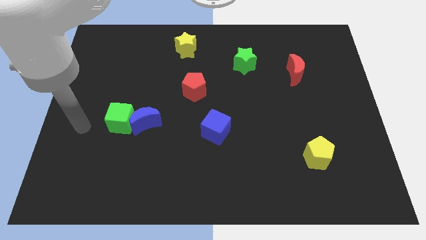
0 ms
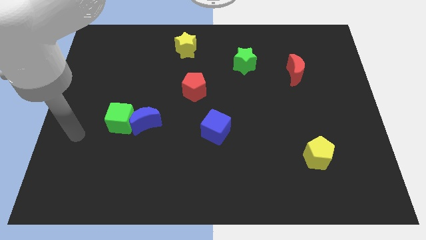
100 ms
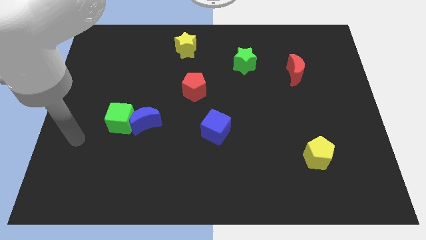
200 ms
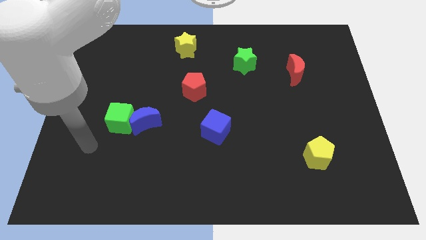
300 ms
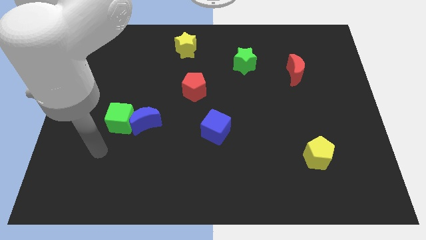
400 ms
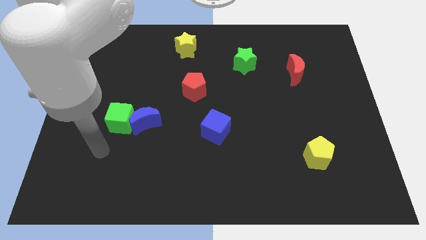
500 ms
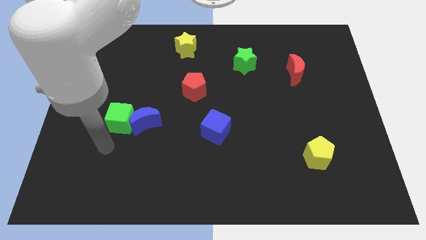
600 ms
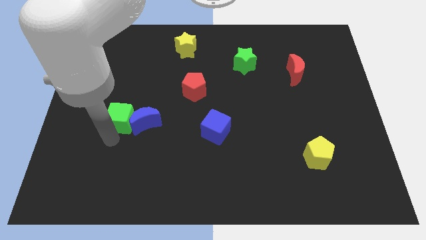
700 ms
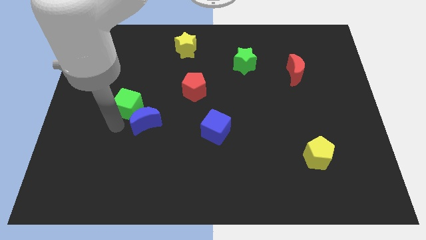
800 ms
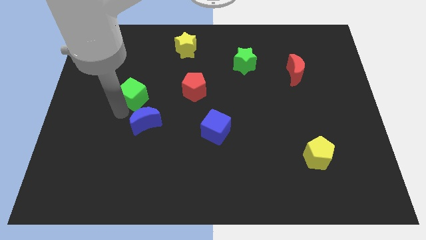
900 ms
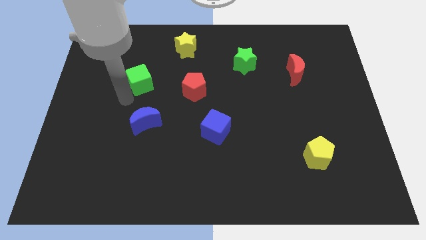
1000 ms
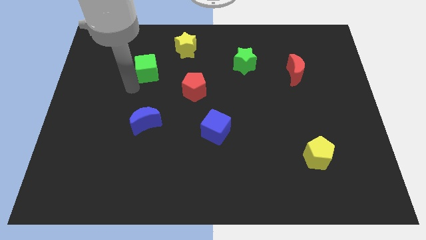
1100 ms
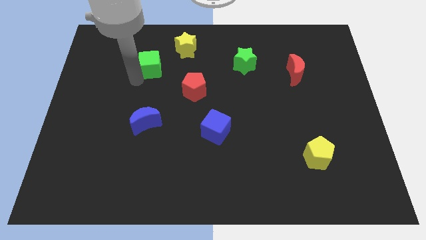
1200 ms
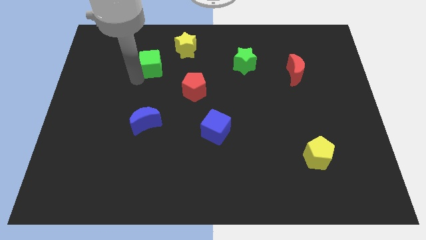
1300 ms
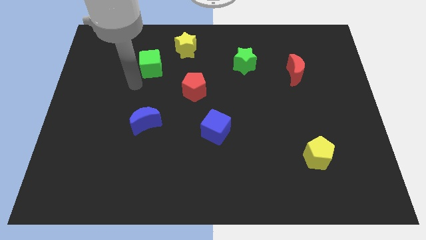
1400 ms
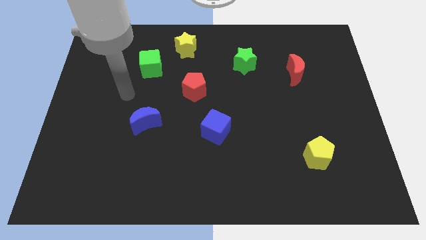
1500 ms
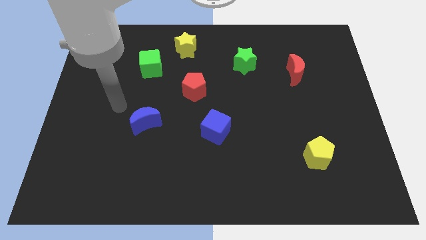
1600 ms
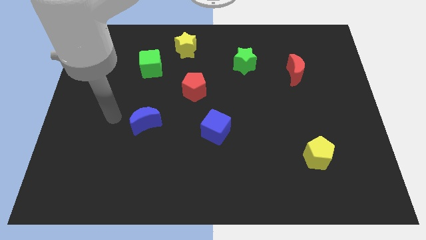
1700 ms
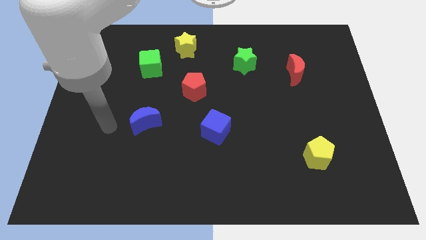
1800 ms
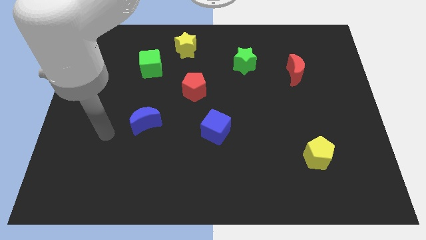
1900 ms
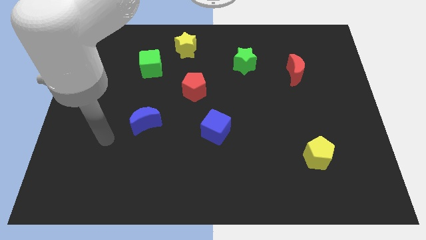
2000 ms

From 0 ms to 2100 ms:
separate green cube from blue moon

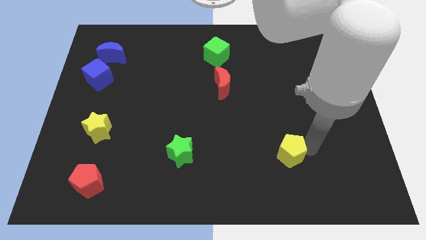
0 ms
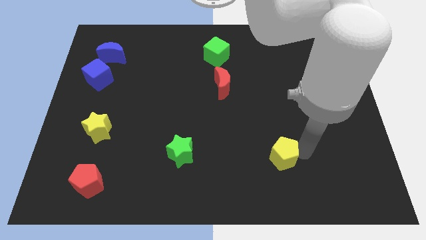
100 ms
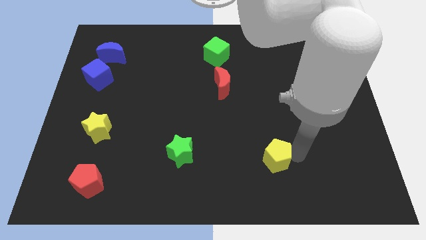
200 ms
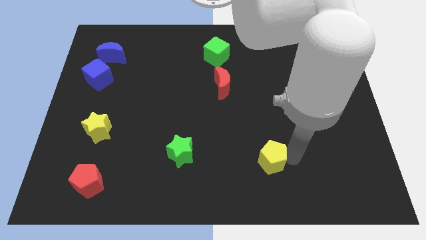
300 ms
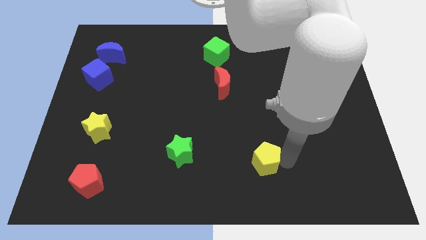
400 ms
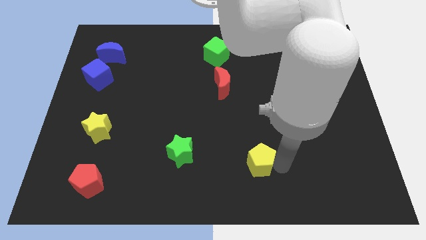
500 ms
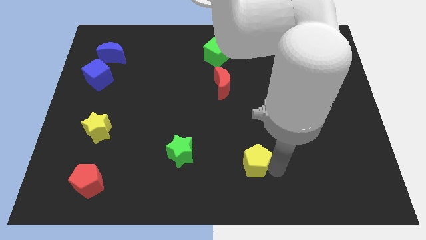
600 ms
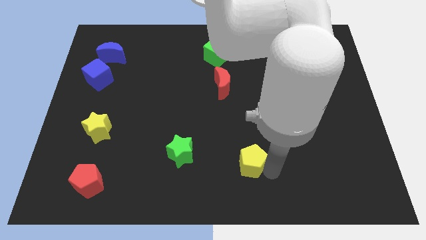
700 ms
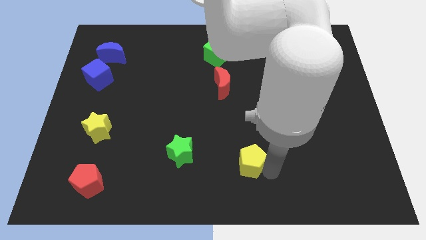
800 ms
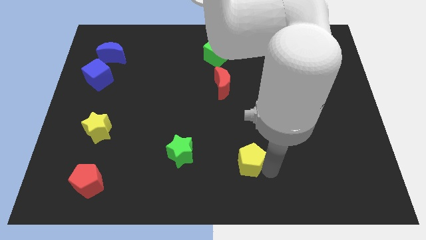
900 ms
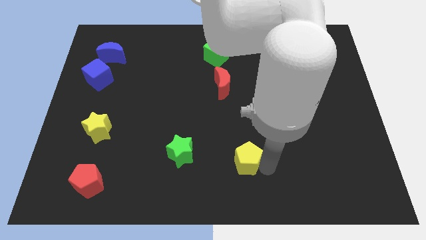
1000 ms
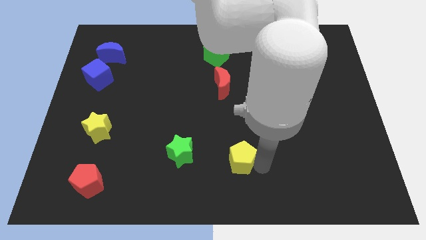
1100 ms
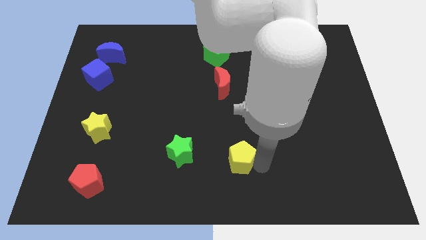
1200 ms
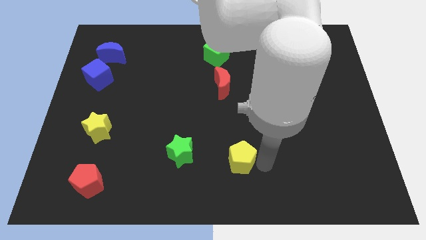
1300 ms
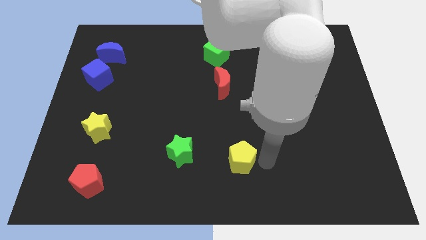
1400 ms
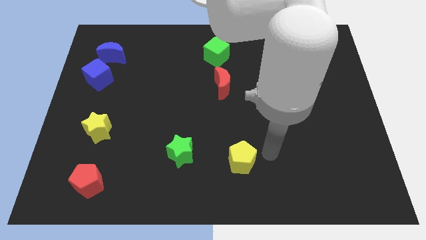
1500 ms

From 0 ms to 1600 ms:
place yellow pentagon parallel to green star

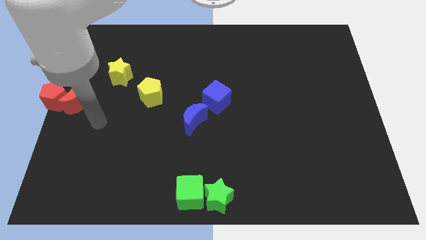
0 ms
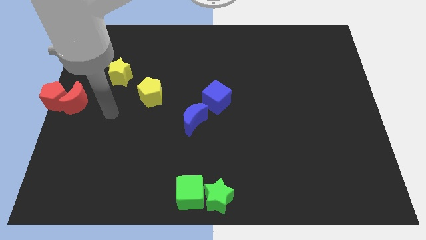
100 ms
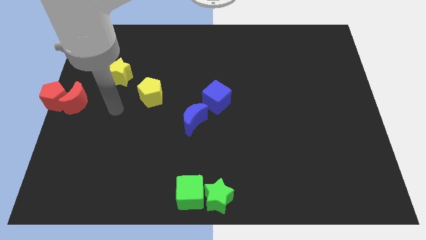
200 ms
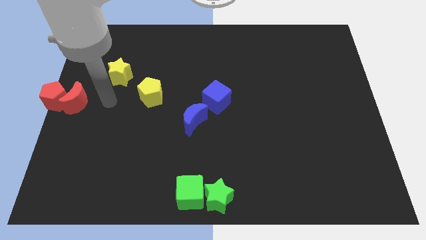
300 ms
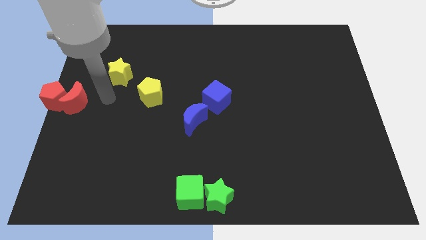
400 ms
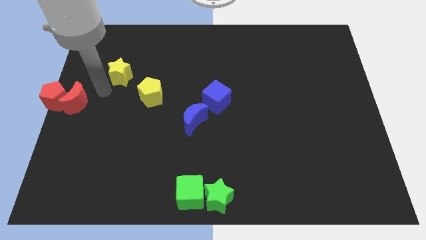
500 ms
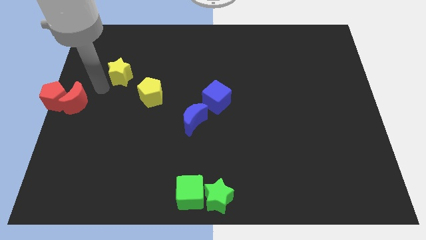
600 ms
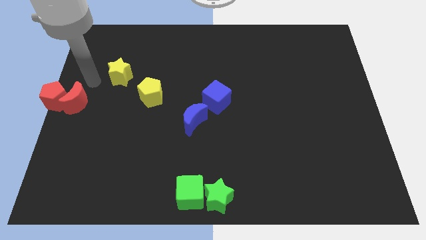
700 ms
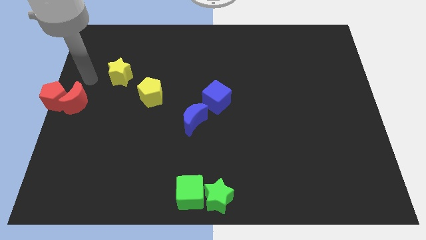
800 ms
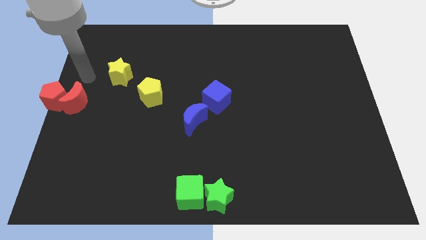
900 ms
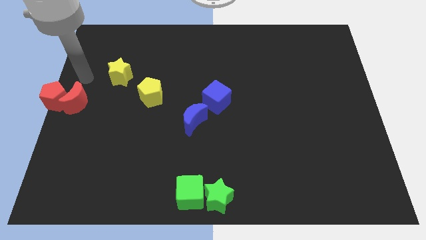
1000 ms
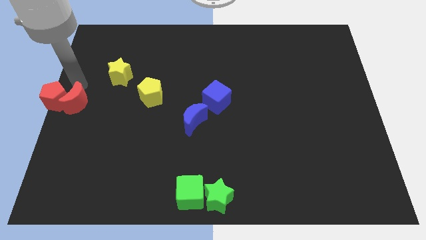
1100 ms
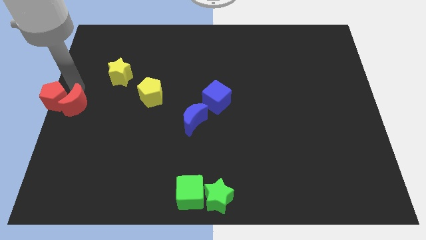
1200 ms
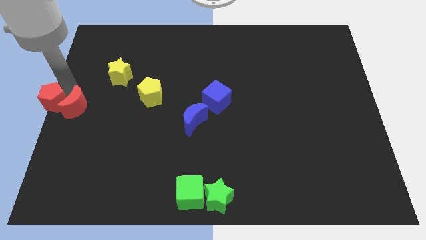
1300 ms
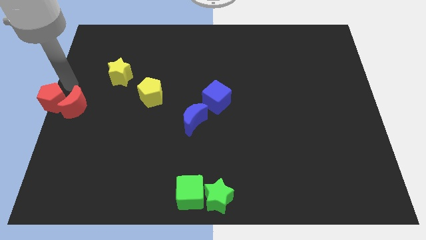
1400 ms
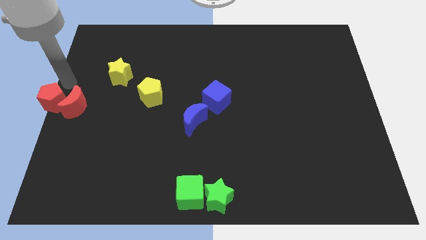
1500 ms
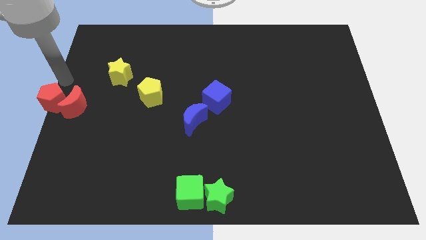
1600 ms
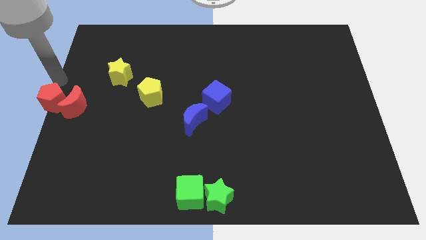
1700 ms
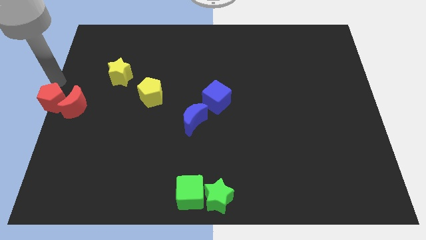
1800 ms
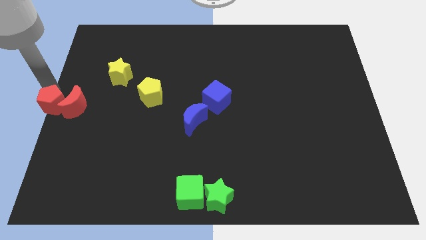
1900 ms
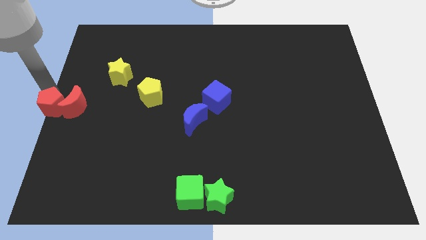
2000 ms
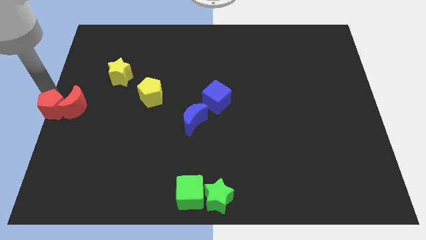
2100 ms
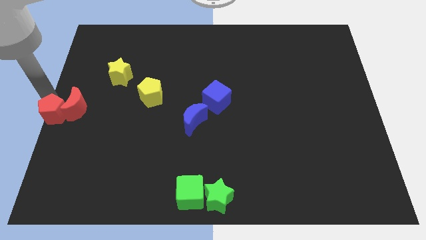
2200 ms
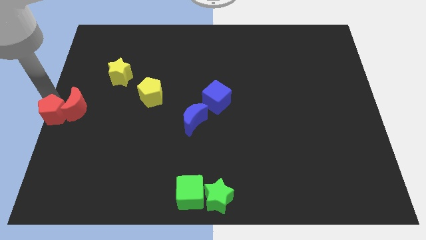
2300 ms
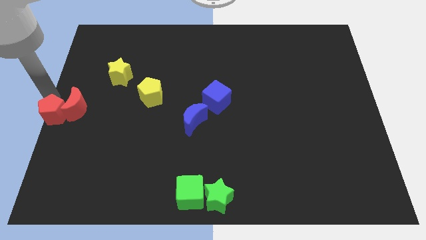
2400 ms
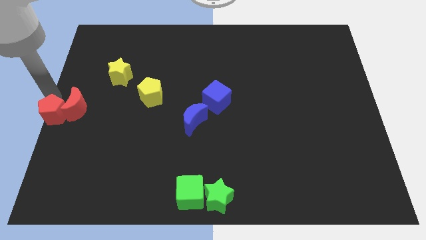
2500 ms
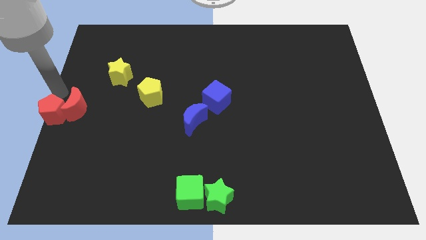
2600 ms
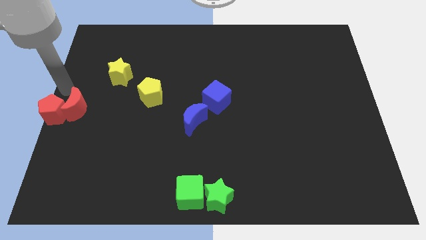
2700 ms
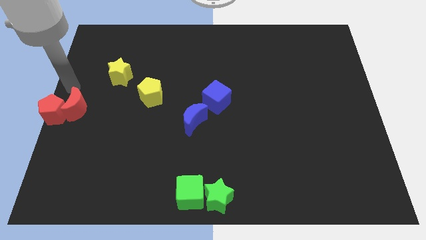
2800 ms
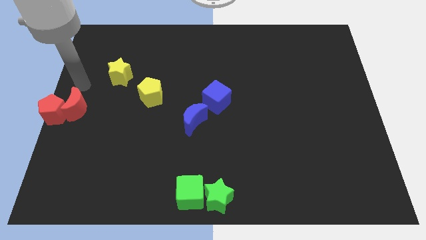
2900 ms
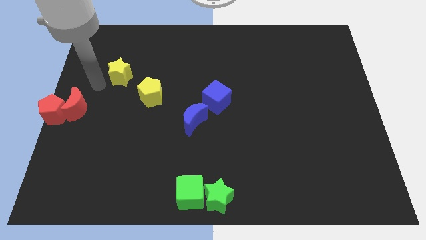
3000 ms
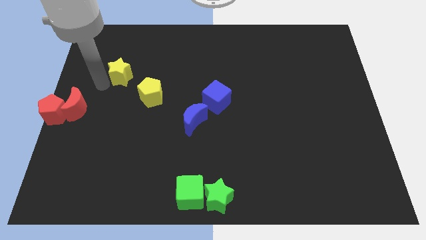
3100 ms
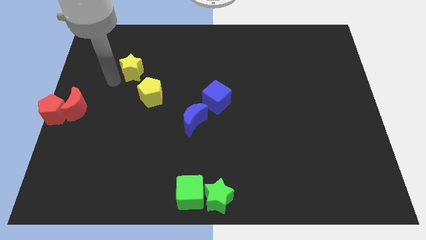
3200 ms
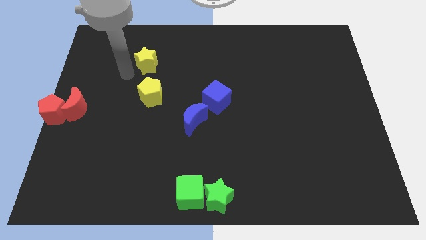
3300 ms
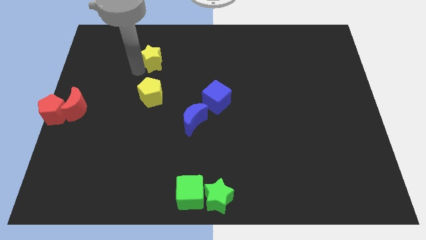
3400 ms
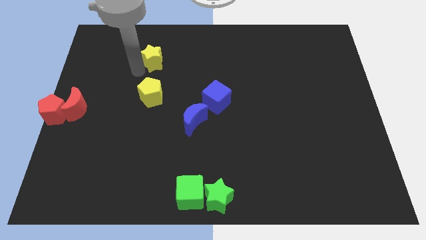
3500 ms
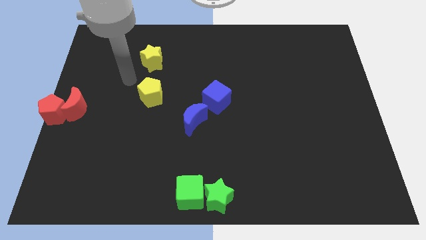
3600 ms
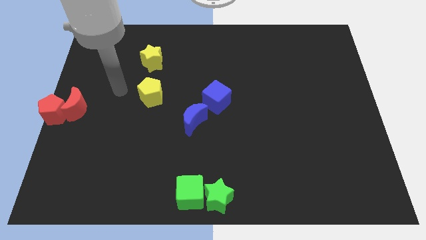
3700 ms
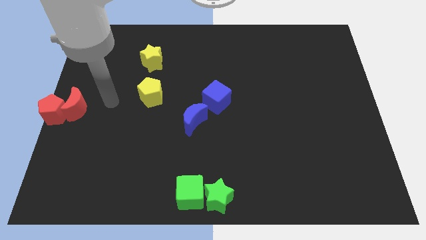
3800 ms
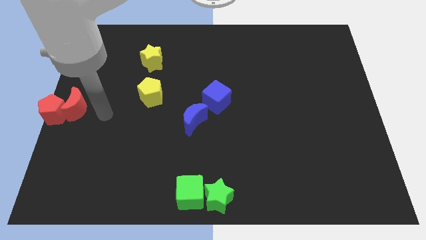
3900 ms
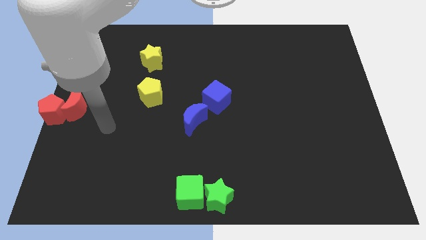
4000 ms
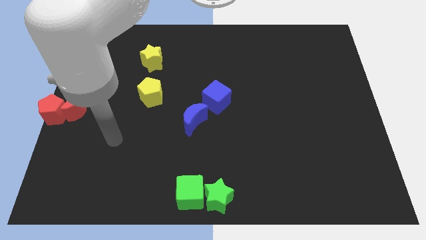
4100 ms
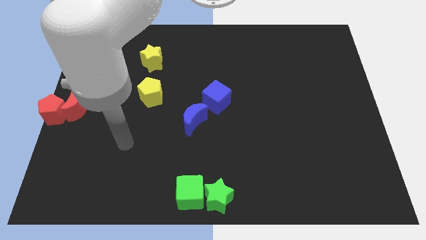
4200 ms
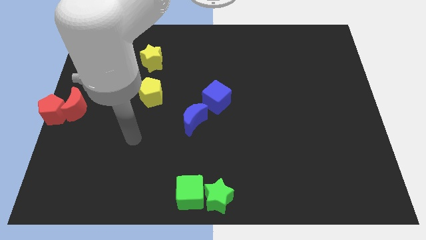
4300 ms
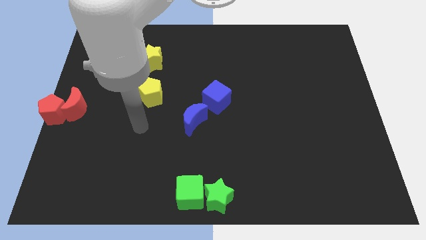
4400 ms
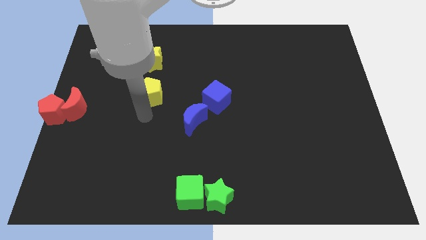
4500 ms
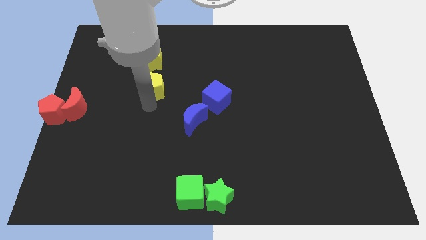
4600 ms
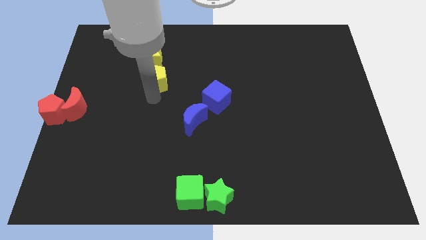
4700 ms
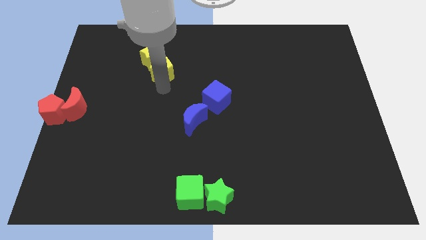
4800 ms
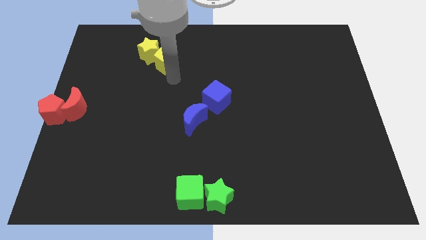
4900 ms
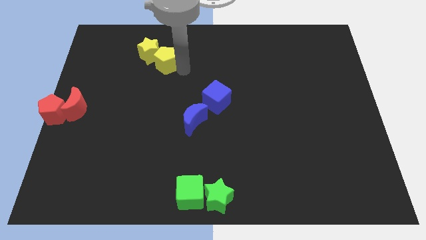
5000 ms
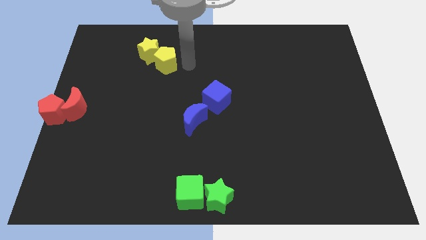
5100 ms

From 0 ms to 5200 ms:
move the yellow star and yellow pentagon towards top

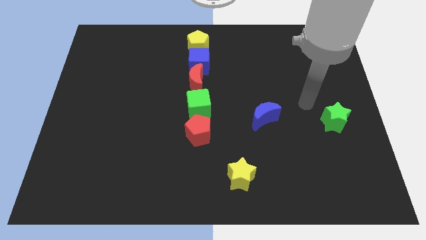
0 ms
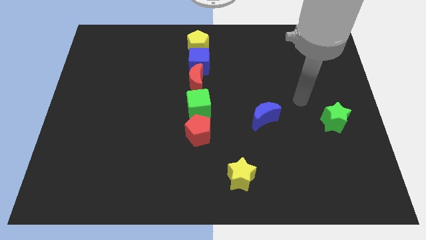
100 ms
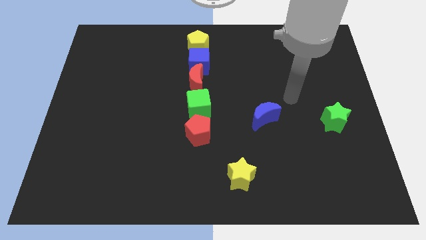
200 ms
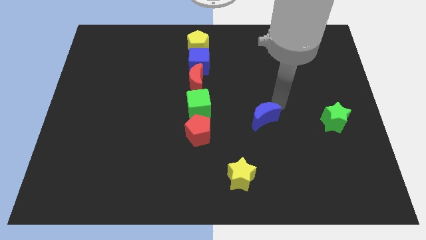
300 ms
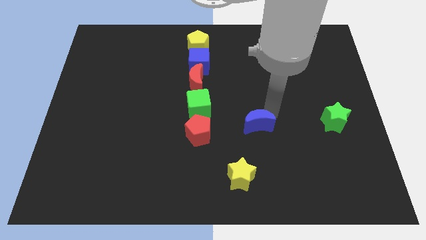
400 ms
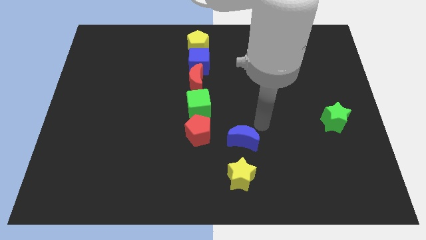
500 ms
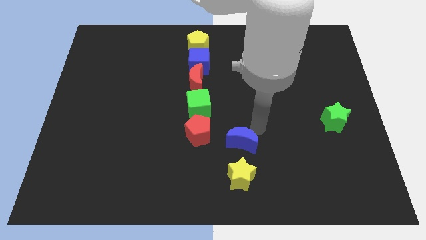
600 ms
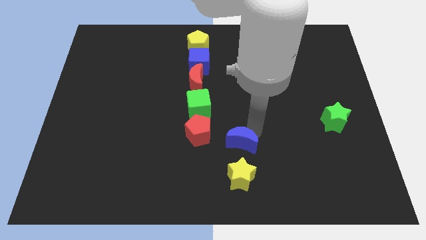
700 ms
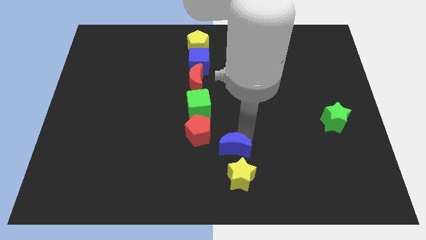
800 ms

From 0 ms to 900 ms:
place the blue moon above the yellow star
